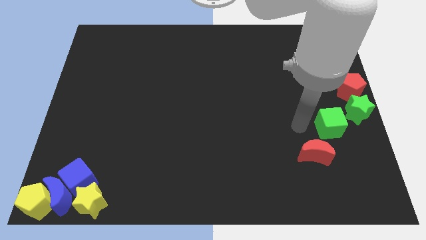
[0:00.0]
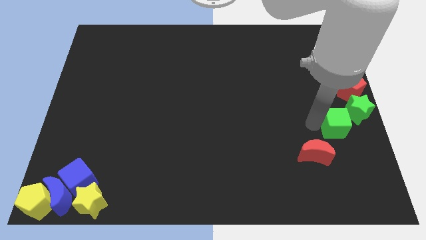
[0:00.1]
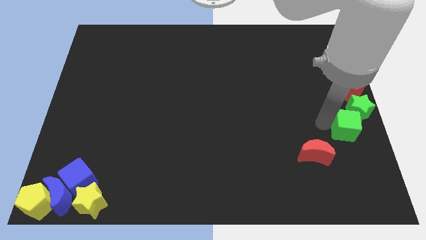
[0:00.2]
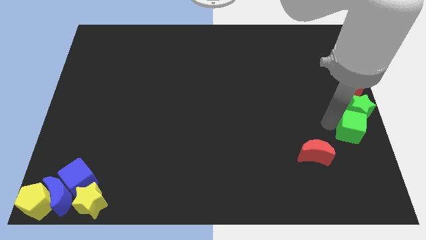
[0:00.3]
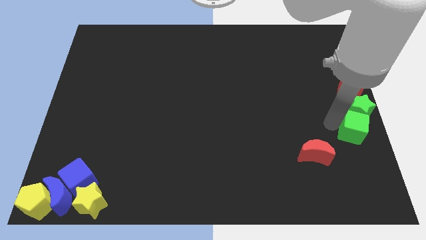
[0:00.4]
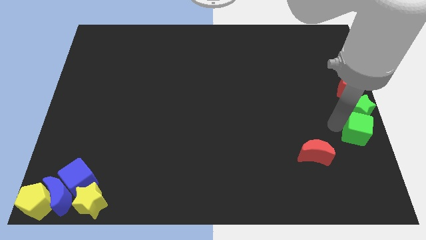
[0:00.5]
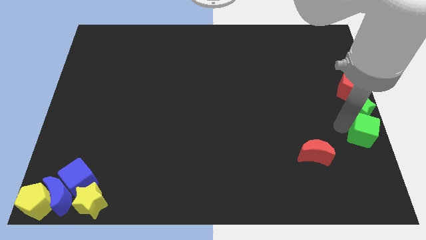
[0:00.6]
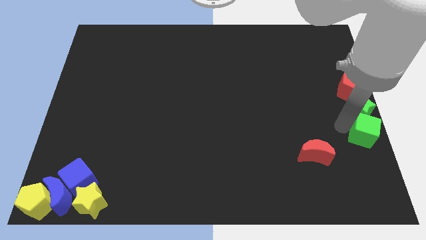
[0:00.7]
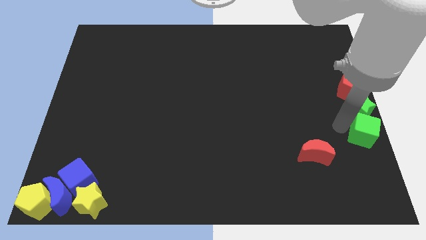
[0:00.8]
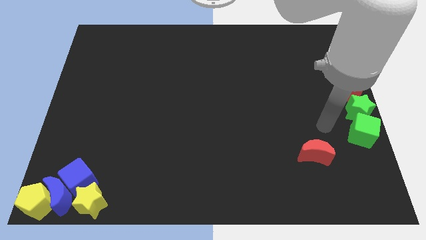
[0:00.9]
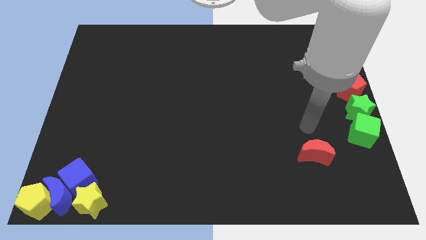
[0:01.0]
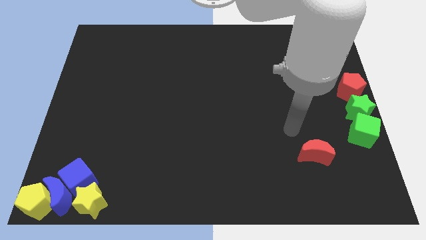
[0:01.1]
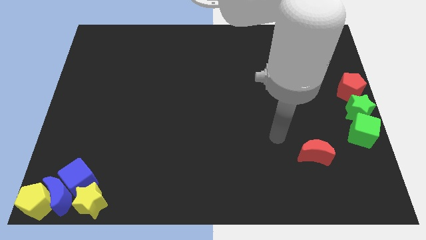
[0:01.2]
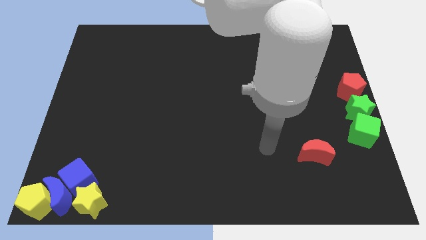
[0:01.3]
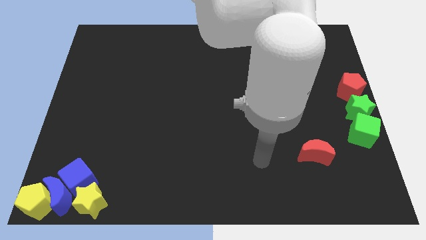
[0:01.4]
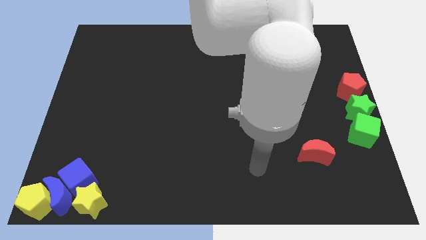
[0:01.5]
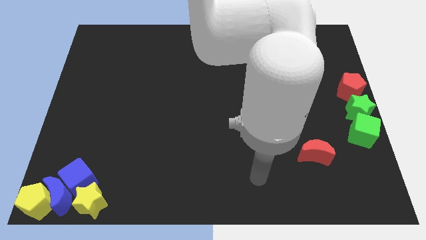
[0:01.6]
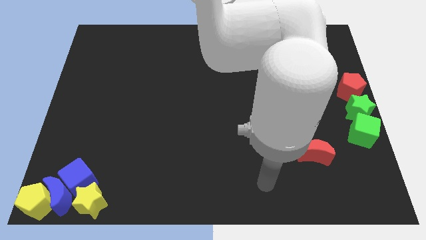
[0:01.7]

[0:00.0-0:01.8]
push the green cube below the green star

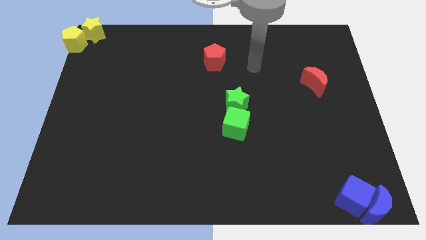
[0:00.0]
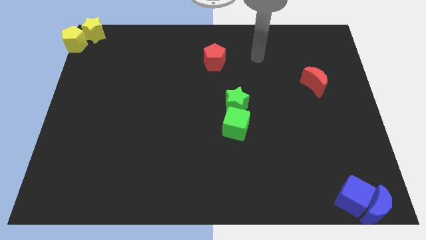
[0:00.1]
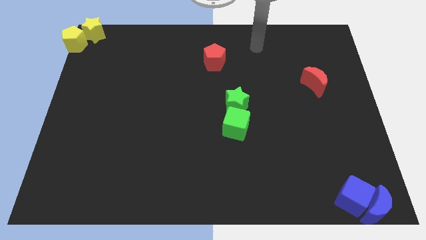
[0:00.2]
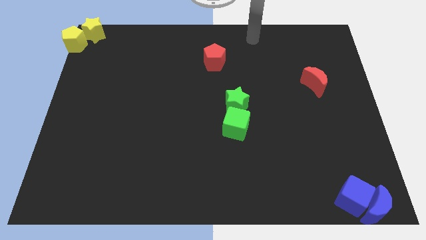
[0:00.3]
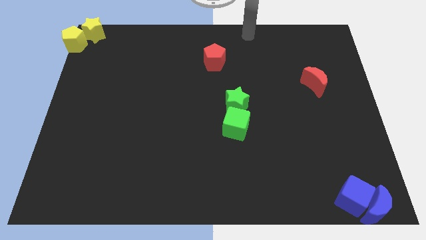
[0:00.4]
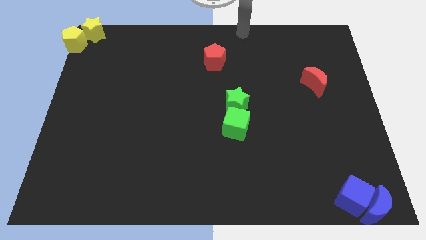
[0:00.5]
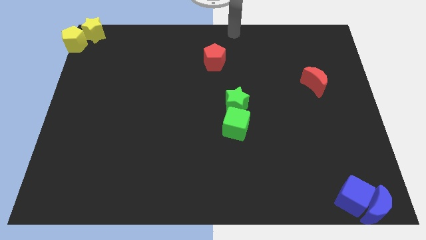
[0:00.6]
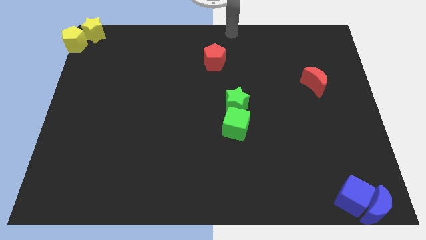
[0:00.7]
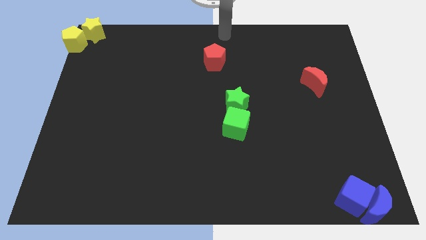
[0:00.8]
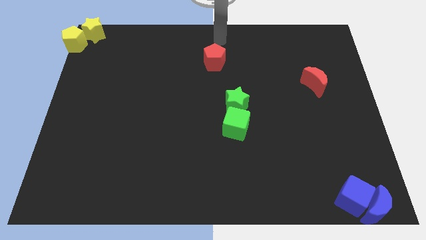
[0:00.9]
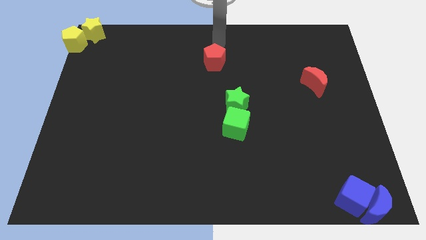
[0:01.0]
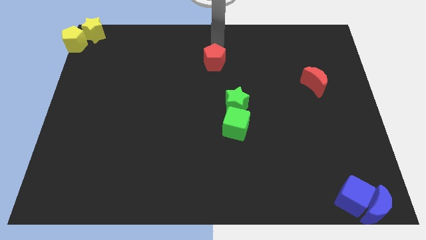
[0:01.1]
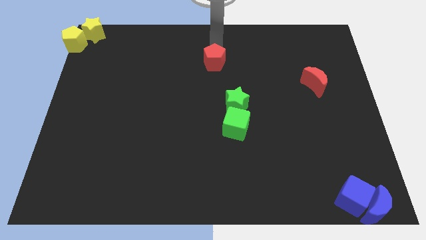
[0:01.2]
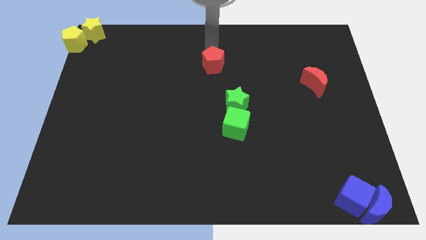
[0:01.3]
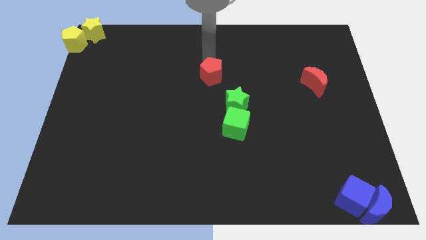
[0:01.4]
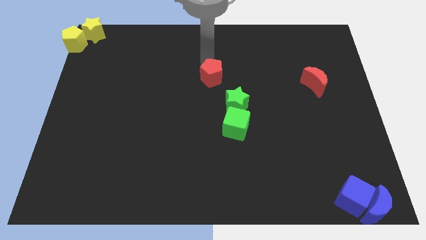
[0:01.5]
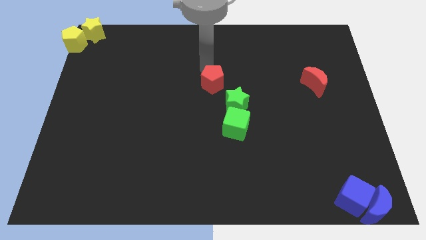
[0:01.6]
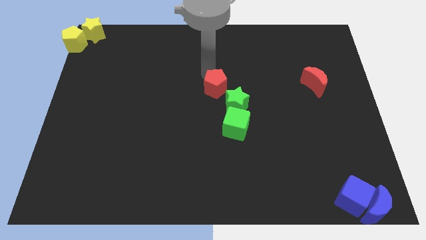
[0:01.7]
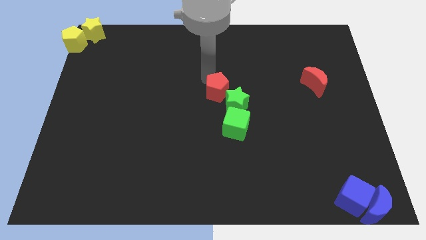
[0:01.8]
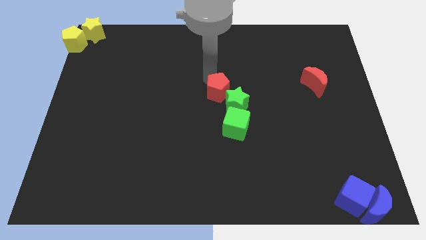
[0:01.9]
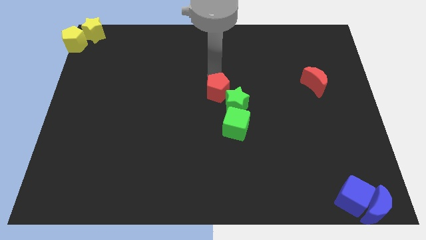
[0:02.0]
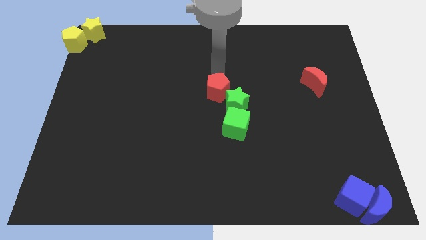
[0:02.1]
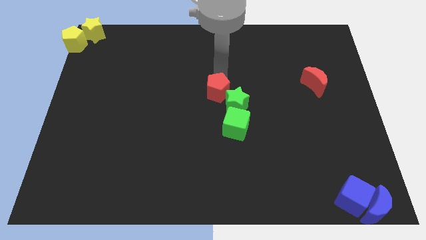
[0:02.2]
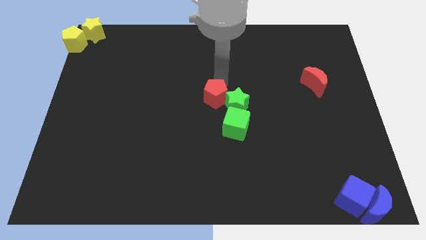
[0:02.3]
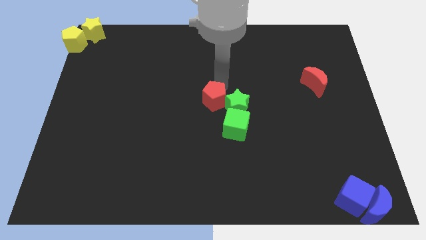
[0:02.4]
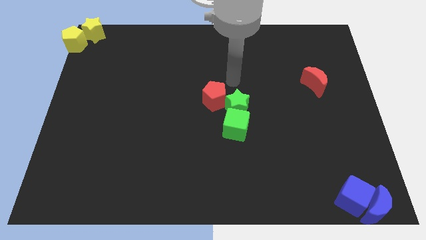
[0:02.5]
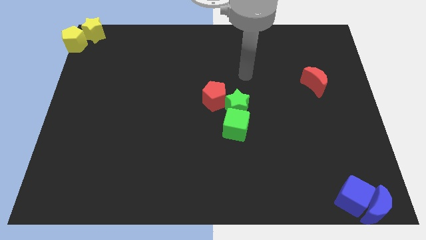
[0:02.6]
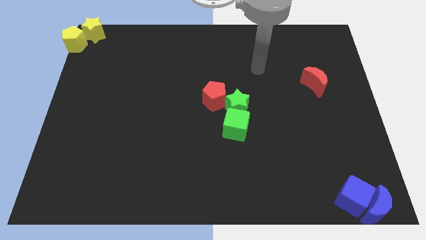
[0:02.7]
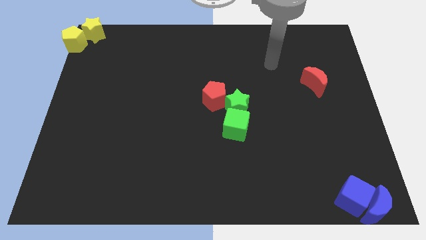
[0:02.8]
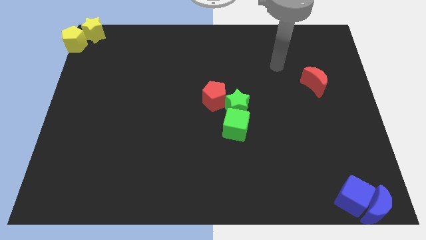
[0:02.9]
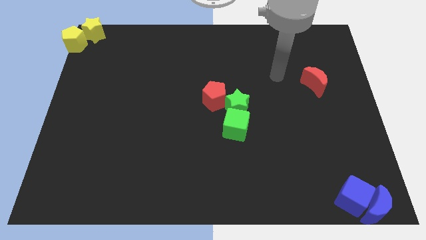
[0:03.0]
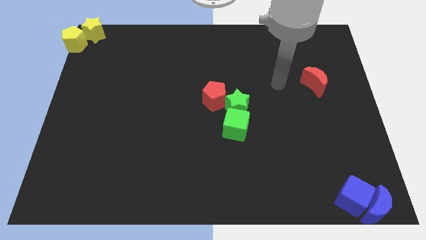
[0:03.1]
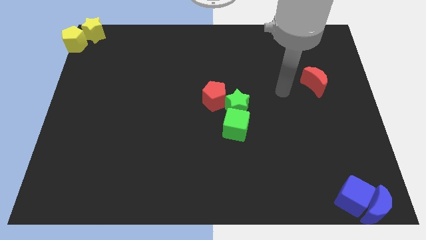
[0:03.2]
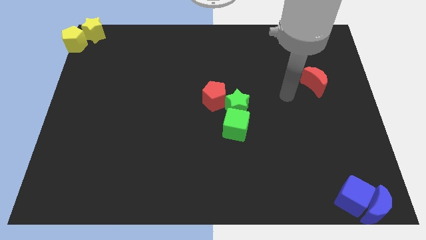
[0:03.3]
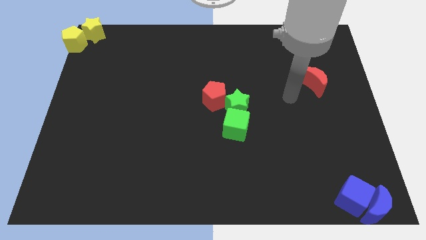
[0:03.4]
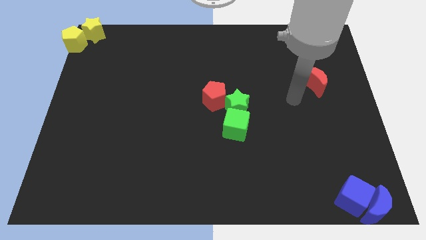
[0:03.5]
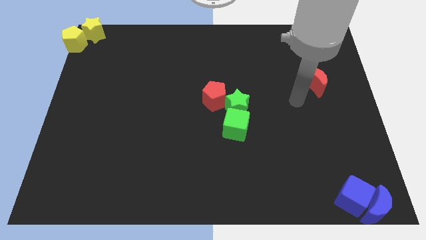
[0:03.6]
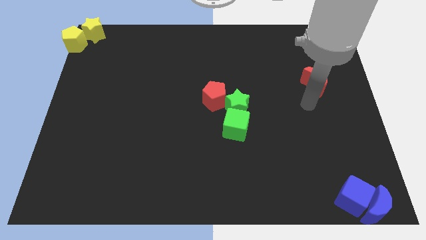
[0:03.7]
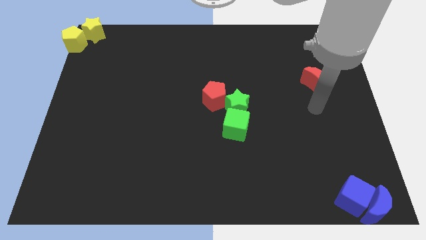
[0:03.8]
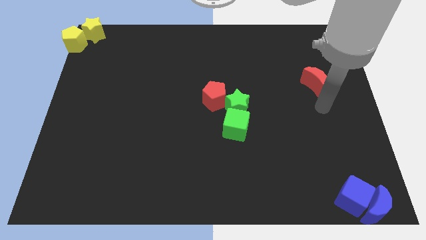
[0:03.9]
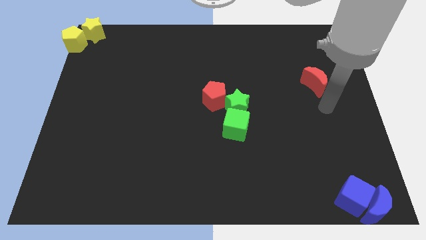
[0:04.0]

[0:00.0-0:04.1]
move the red pentagon into the green star

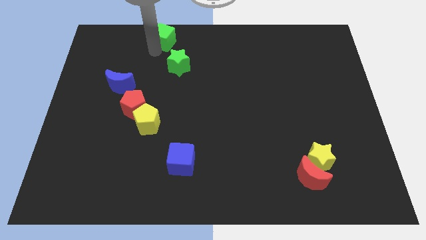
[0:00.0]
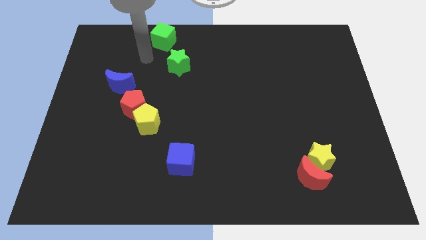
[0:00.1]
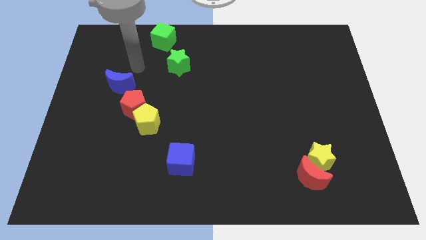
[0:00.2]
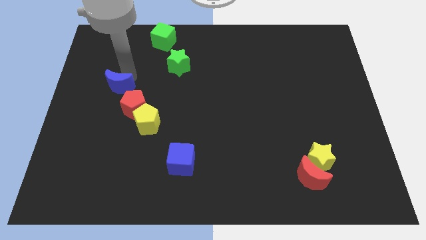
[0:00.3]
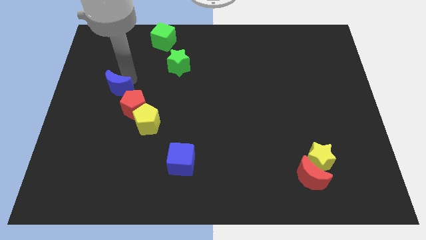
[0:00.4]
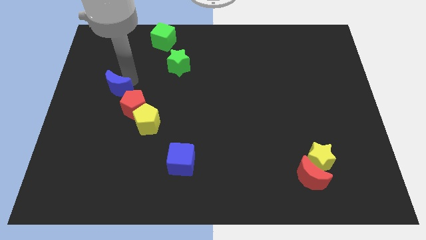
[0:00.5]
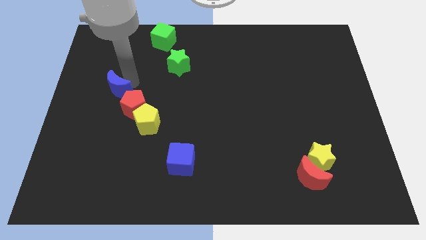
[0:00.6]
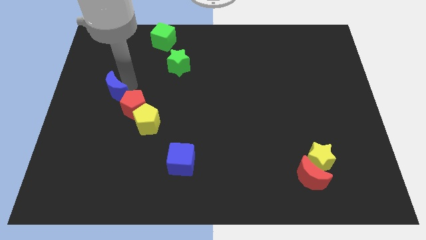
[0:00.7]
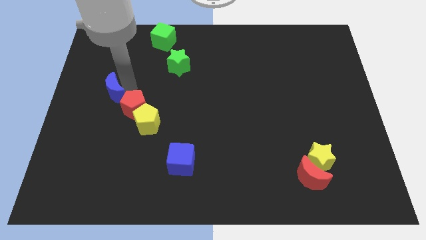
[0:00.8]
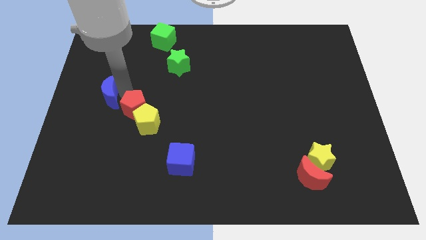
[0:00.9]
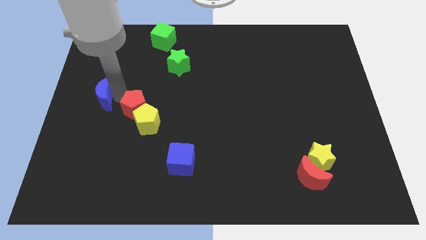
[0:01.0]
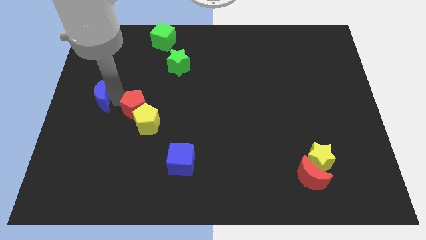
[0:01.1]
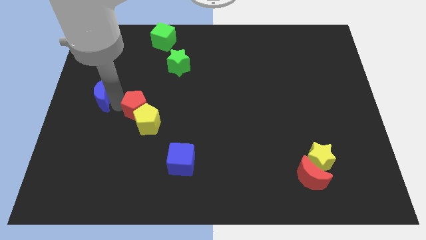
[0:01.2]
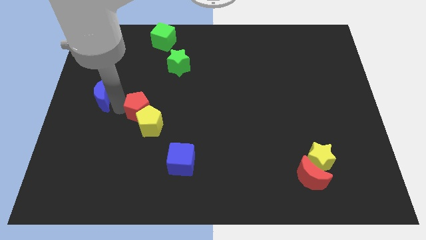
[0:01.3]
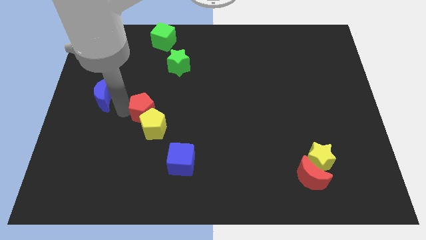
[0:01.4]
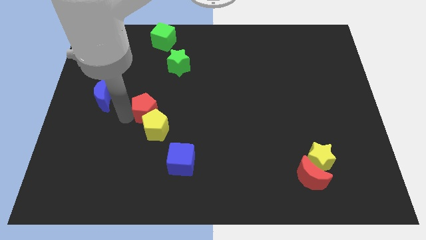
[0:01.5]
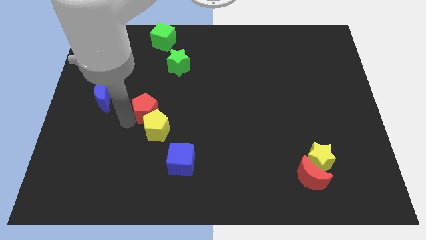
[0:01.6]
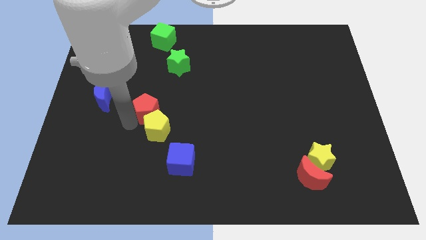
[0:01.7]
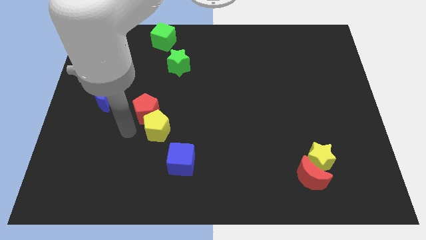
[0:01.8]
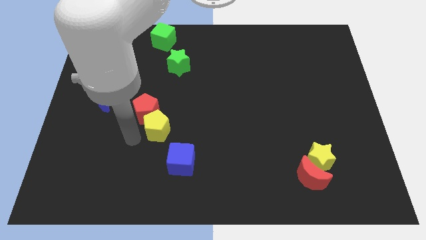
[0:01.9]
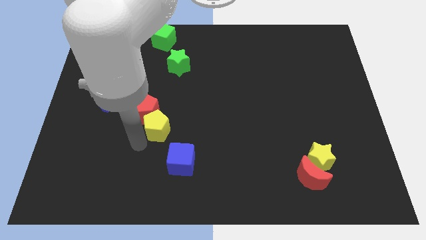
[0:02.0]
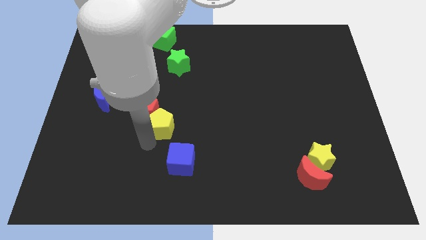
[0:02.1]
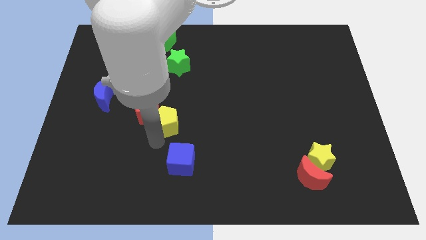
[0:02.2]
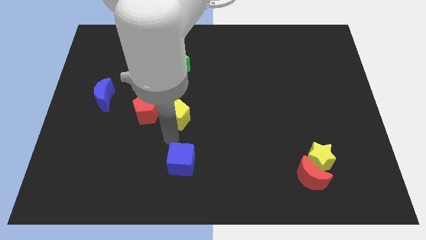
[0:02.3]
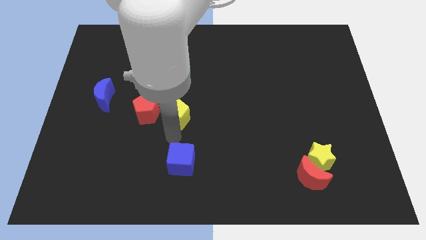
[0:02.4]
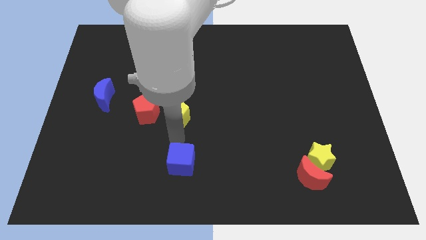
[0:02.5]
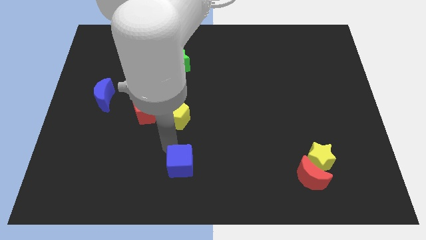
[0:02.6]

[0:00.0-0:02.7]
make a diagonal line with the blue crescent red pentagon and yellow pentagon

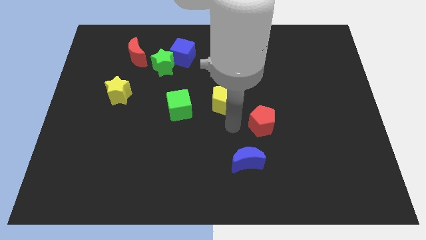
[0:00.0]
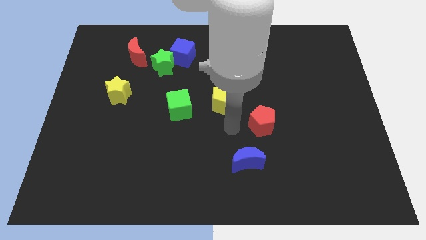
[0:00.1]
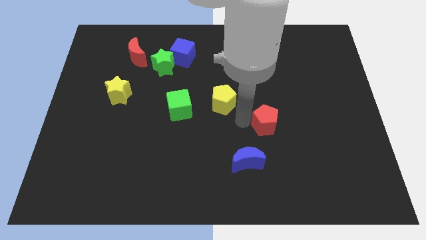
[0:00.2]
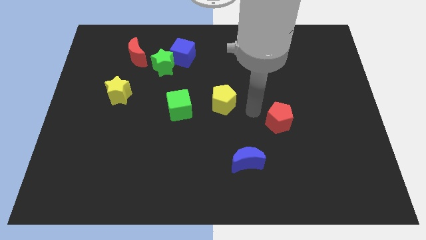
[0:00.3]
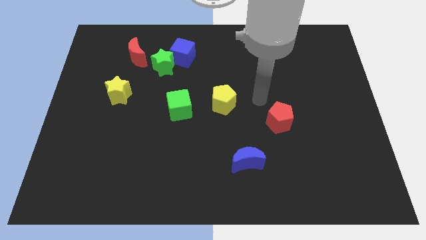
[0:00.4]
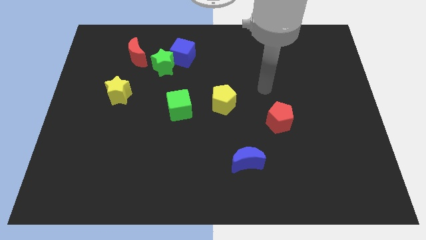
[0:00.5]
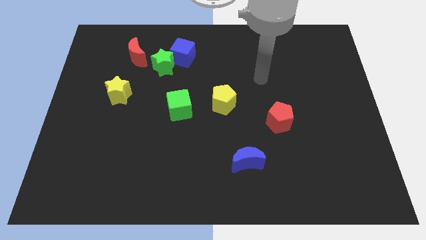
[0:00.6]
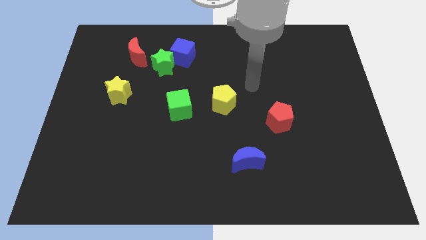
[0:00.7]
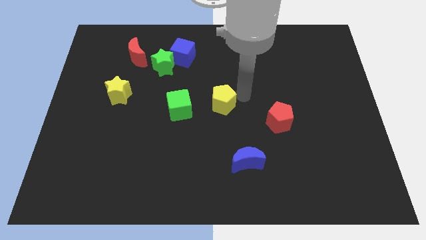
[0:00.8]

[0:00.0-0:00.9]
move red pentagon slightly right
